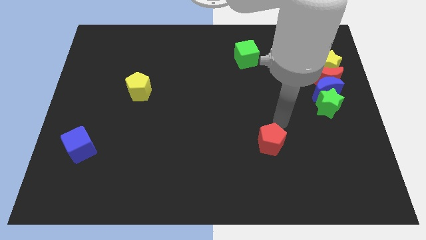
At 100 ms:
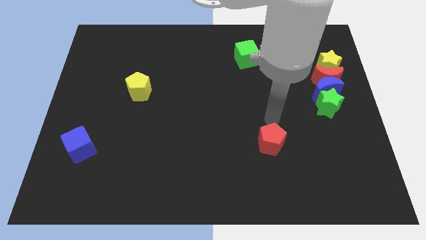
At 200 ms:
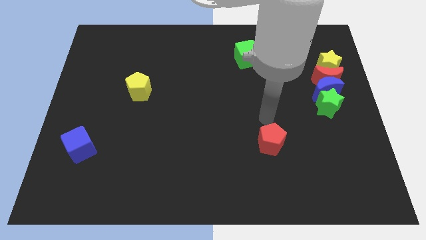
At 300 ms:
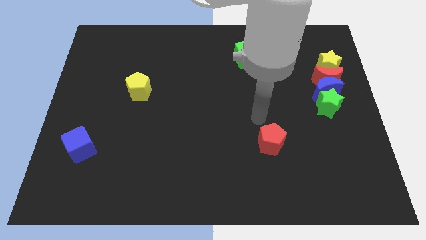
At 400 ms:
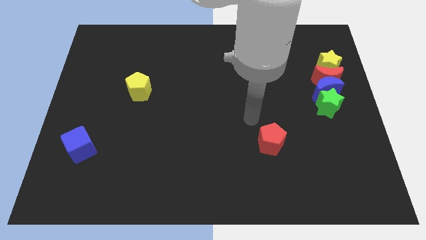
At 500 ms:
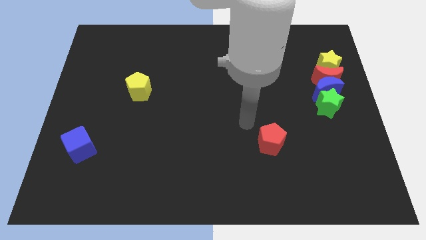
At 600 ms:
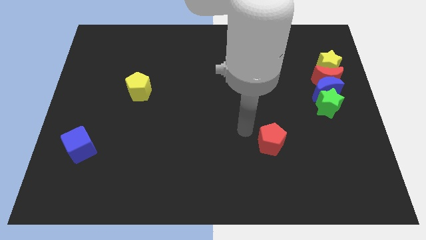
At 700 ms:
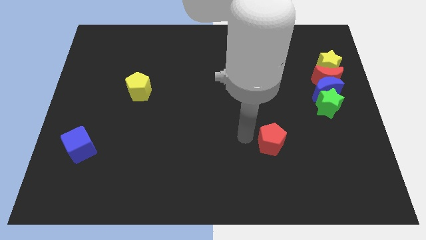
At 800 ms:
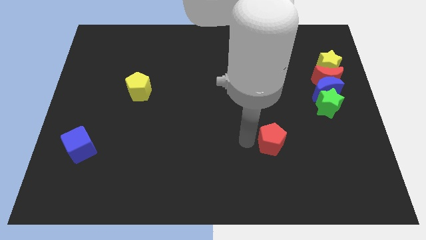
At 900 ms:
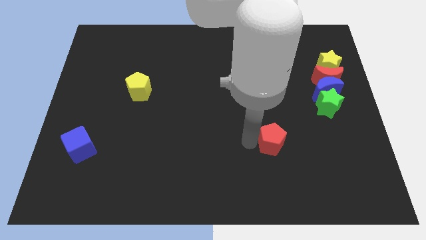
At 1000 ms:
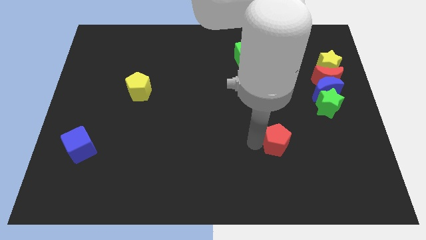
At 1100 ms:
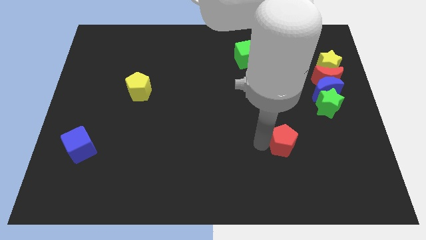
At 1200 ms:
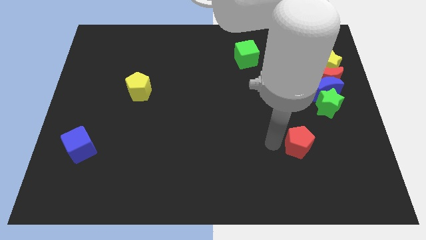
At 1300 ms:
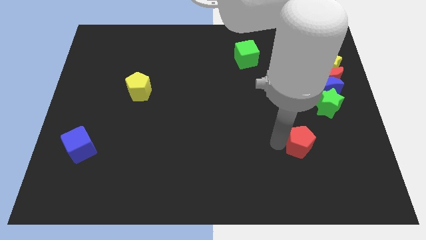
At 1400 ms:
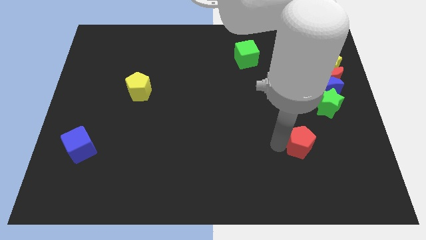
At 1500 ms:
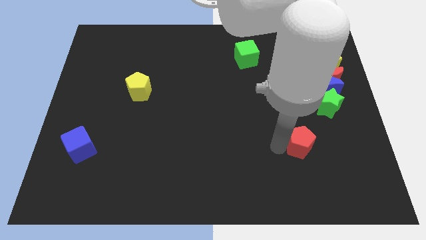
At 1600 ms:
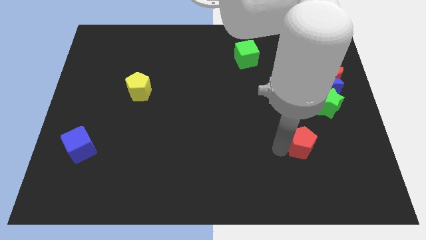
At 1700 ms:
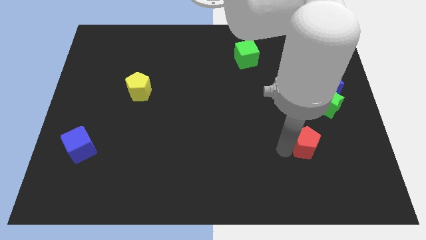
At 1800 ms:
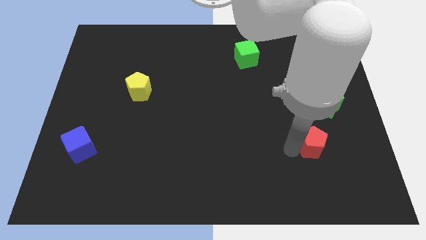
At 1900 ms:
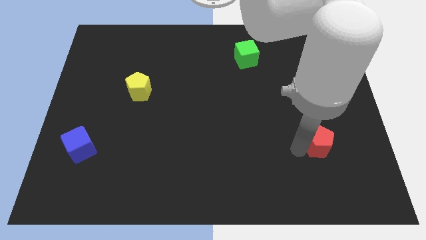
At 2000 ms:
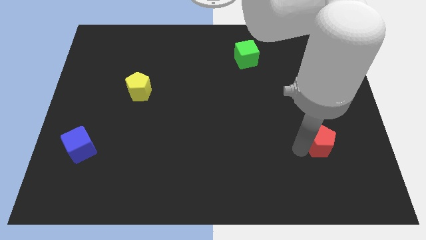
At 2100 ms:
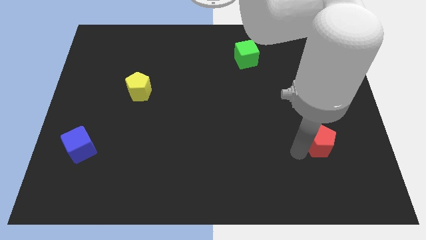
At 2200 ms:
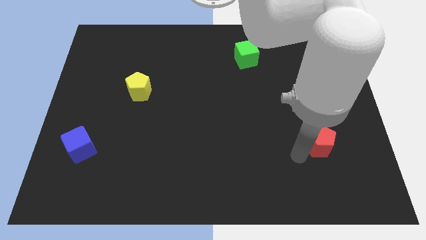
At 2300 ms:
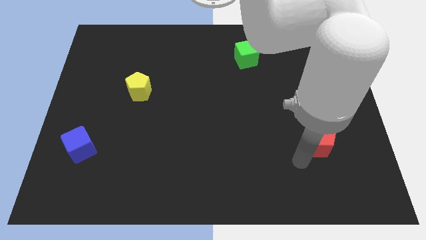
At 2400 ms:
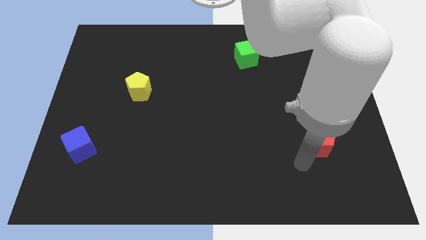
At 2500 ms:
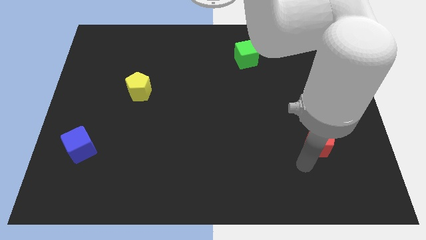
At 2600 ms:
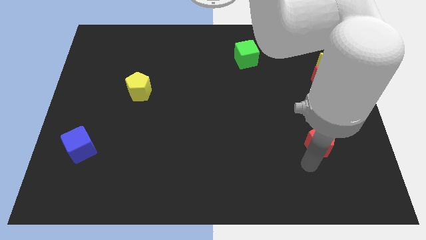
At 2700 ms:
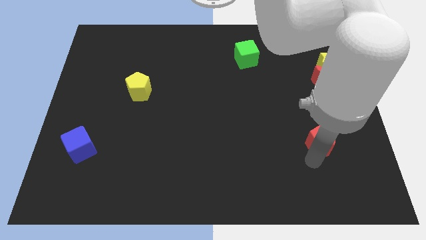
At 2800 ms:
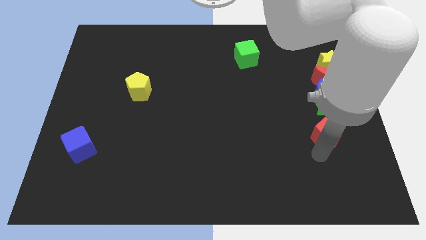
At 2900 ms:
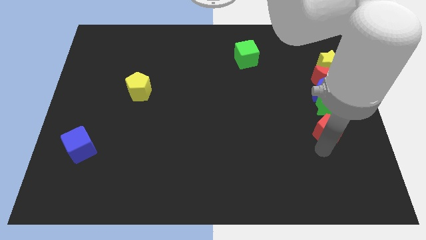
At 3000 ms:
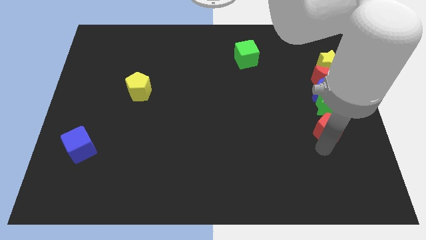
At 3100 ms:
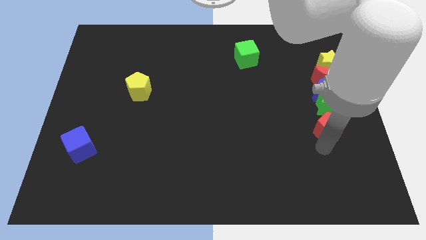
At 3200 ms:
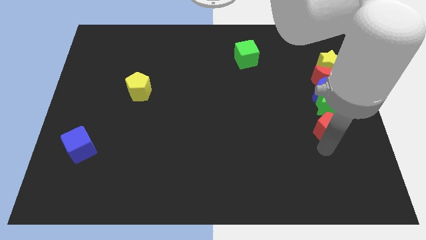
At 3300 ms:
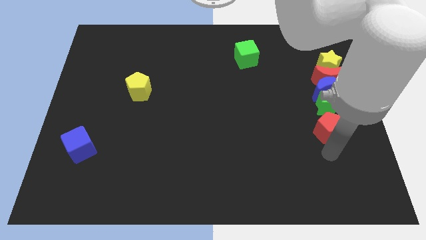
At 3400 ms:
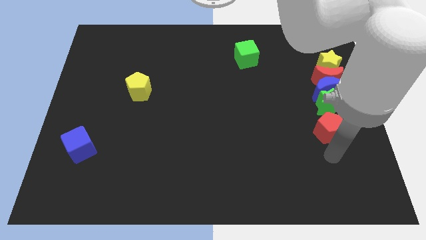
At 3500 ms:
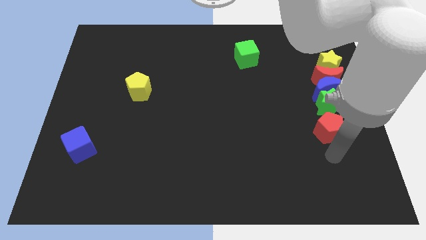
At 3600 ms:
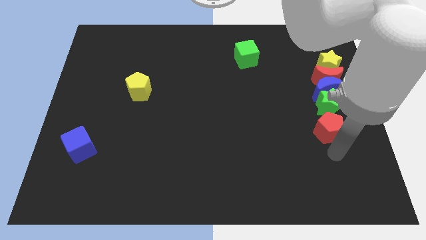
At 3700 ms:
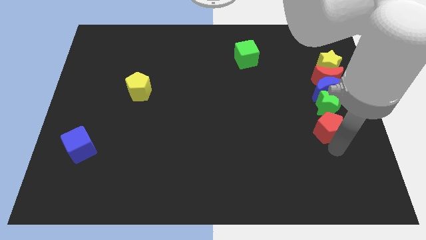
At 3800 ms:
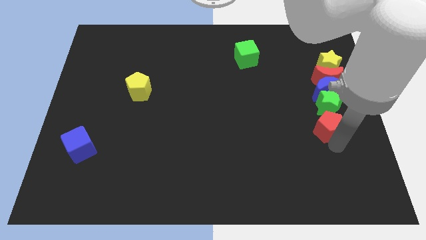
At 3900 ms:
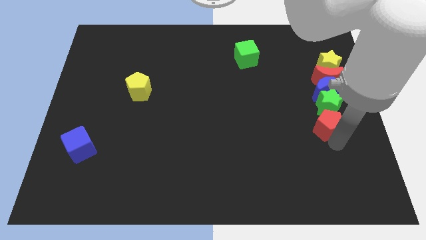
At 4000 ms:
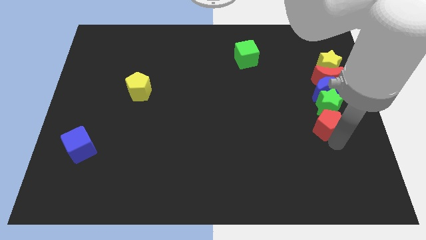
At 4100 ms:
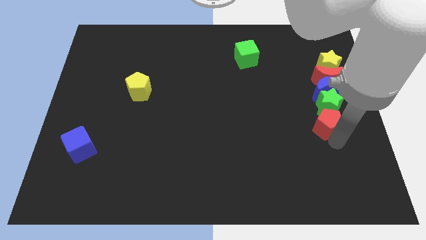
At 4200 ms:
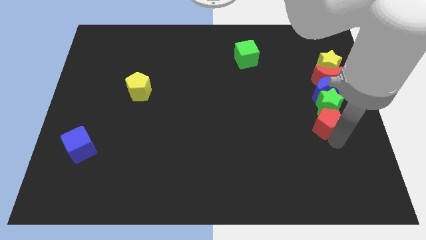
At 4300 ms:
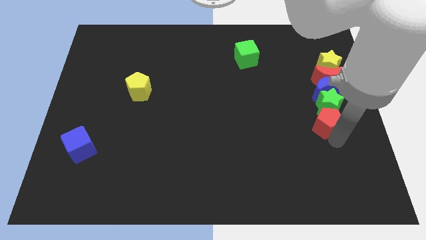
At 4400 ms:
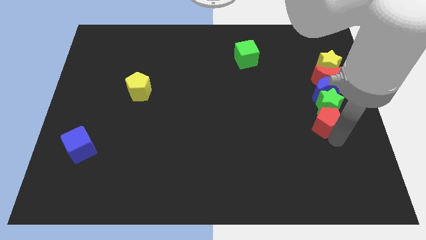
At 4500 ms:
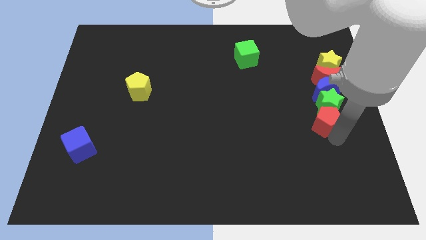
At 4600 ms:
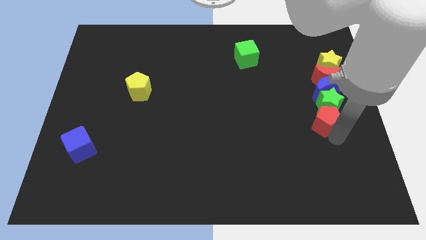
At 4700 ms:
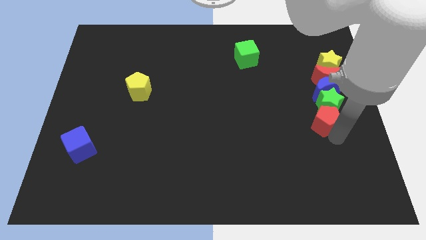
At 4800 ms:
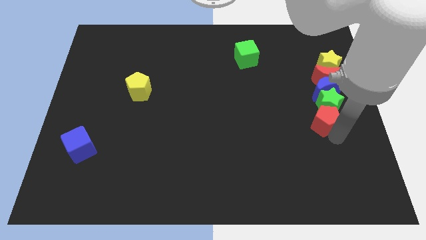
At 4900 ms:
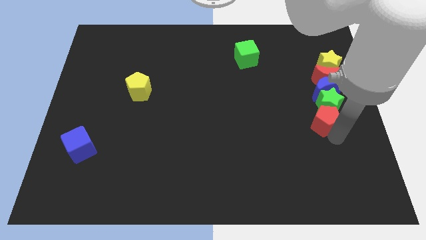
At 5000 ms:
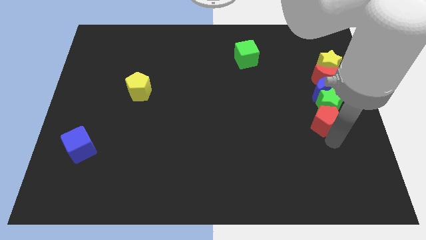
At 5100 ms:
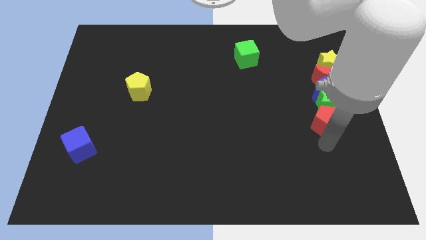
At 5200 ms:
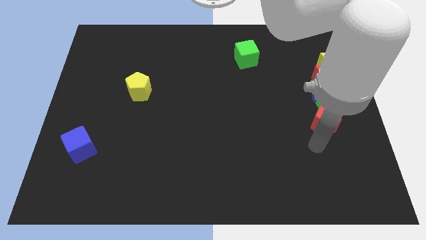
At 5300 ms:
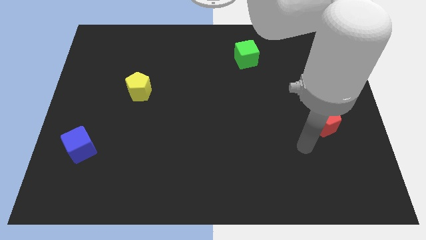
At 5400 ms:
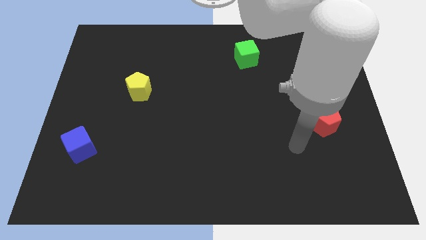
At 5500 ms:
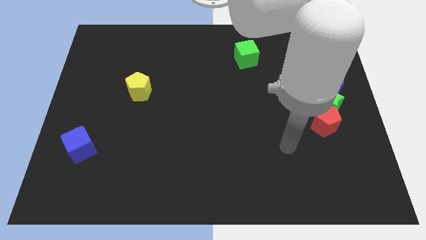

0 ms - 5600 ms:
move the red pentagon into the green star

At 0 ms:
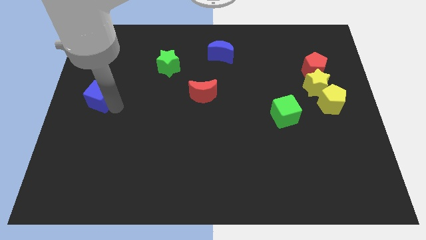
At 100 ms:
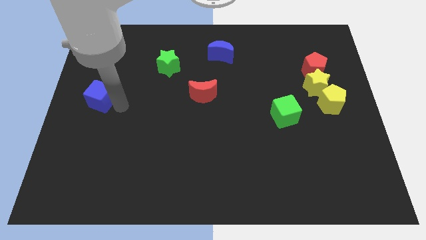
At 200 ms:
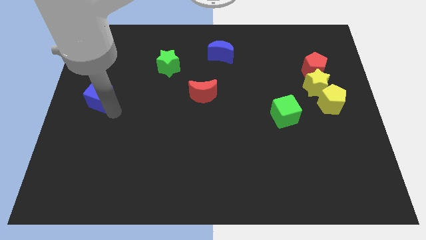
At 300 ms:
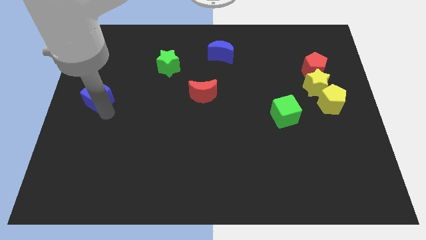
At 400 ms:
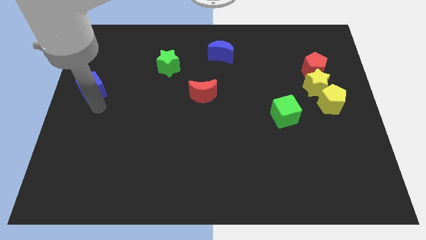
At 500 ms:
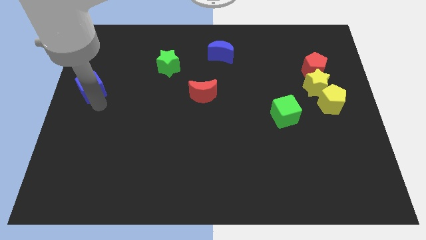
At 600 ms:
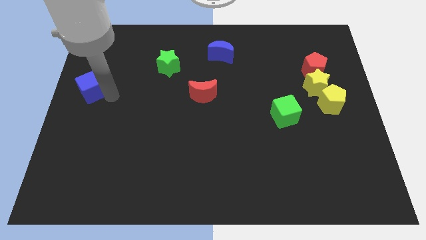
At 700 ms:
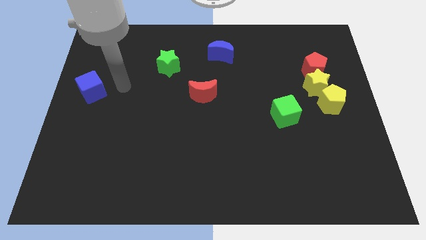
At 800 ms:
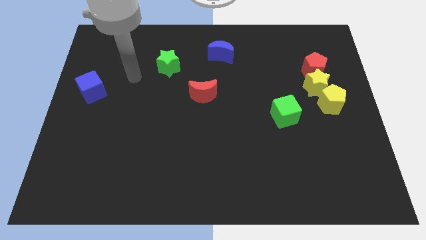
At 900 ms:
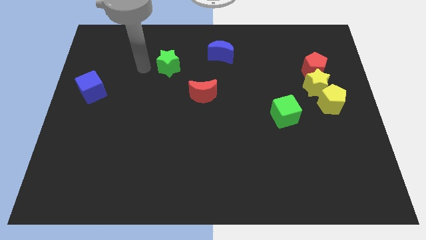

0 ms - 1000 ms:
move blue cube slightly up

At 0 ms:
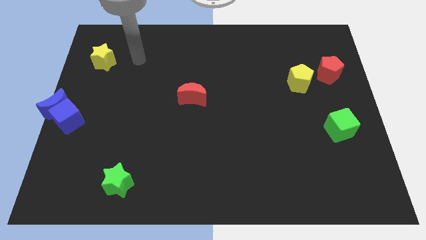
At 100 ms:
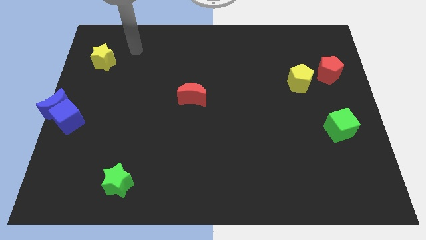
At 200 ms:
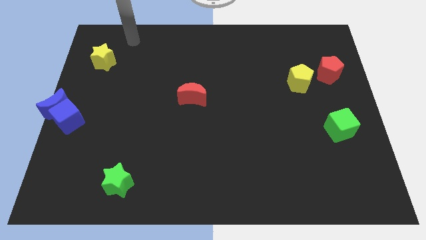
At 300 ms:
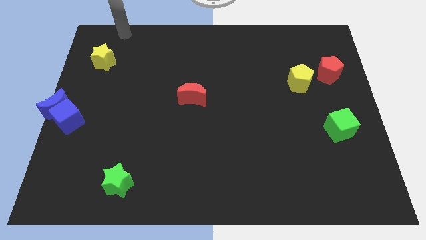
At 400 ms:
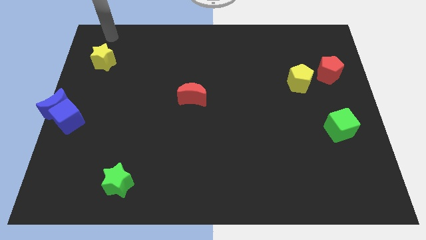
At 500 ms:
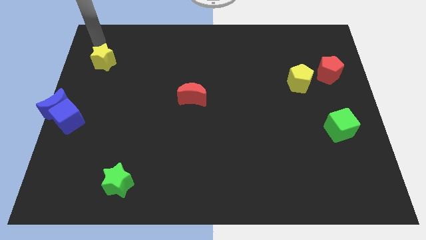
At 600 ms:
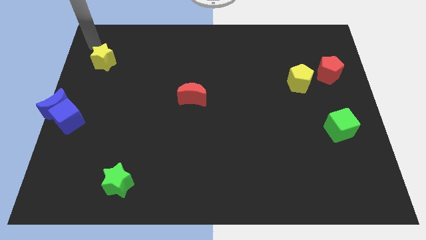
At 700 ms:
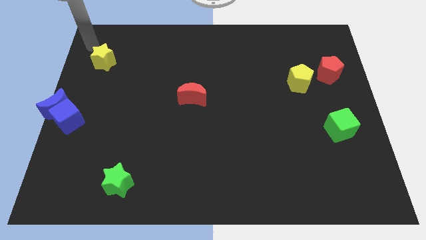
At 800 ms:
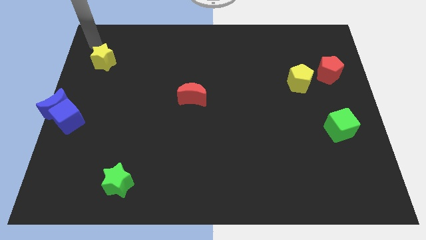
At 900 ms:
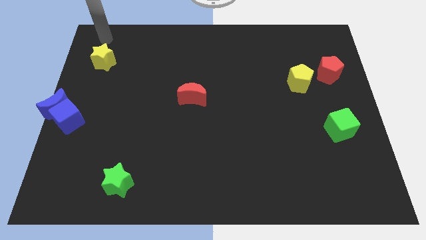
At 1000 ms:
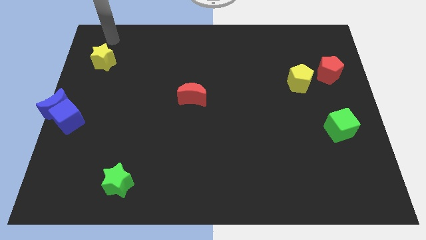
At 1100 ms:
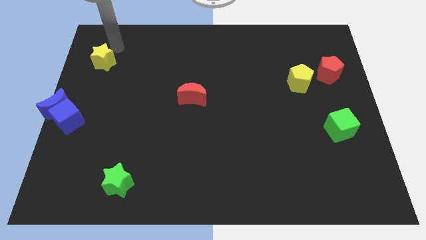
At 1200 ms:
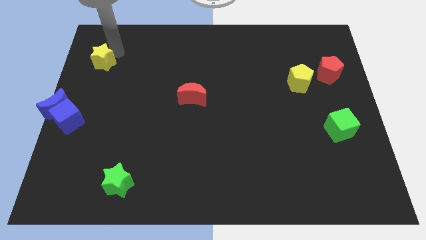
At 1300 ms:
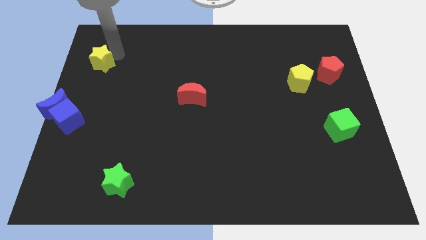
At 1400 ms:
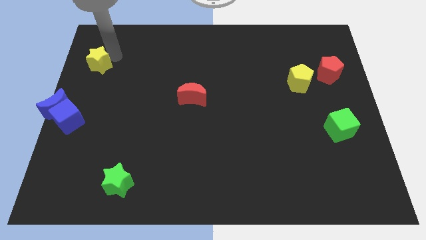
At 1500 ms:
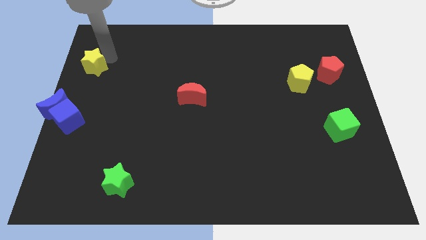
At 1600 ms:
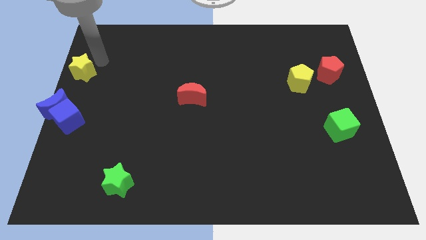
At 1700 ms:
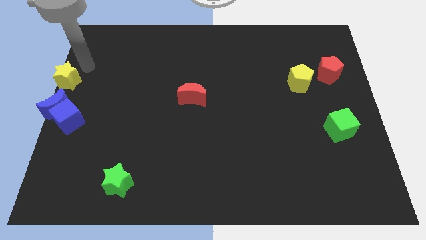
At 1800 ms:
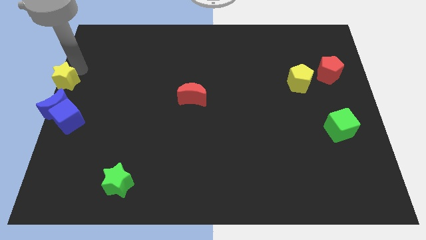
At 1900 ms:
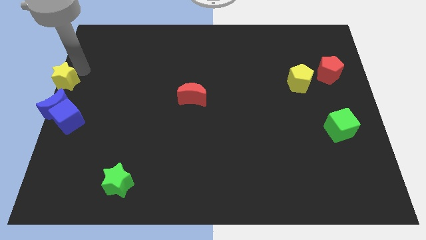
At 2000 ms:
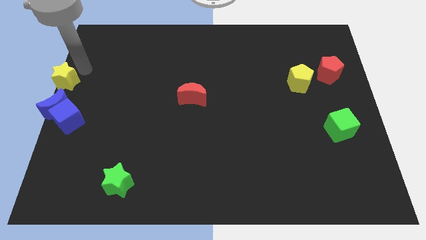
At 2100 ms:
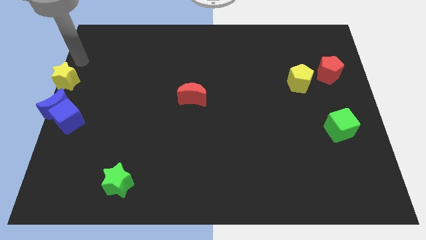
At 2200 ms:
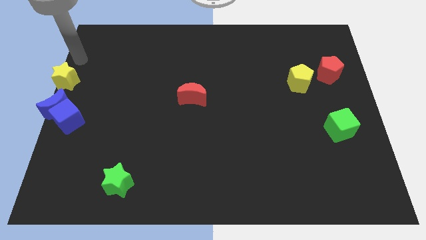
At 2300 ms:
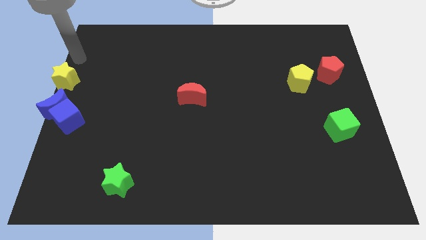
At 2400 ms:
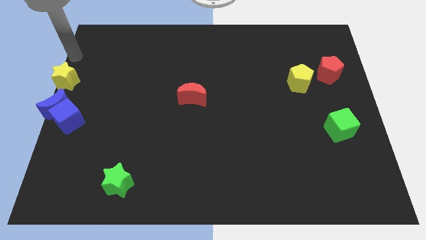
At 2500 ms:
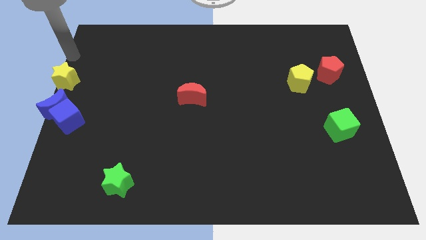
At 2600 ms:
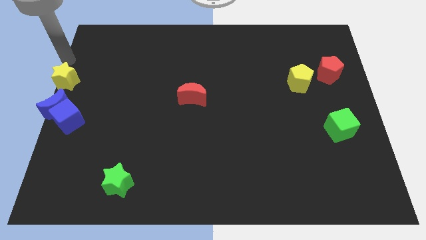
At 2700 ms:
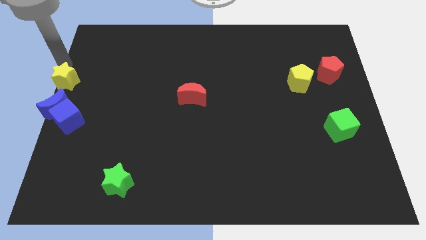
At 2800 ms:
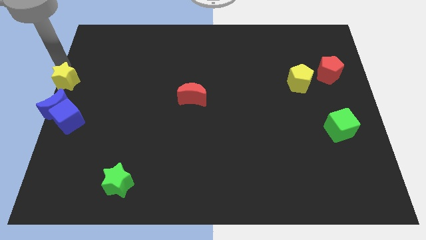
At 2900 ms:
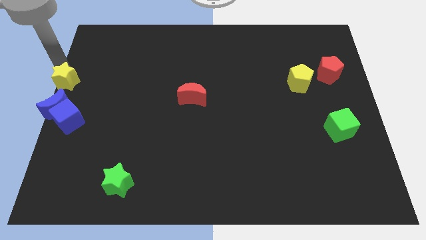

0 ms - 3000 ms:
move yellow star above blue moon
